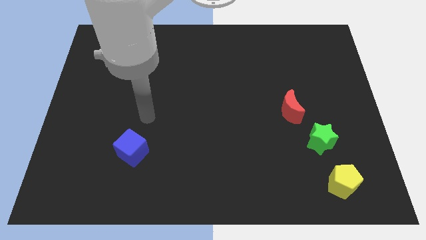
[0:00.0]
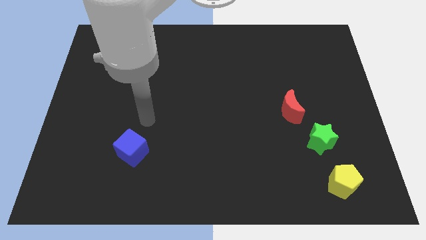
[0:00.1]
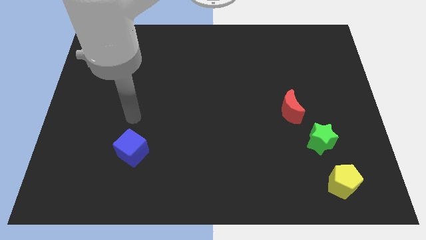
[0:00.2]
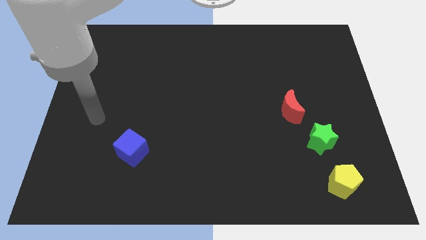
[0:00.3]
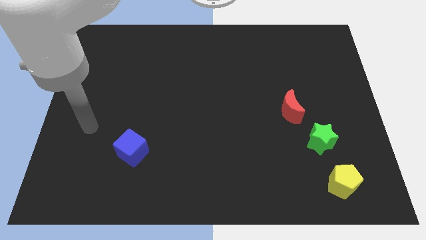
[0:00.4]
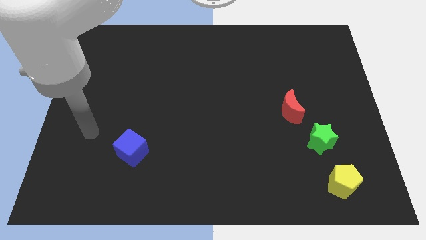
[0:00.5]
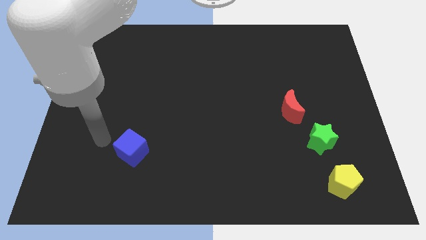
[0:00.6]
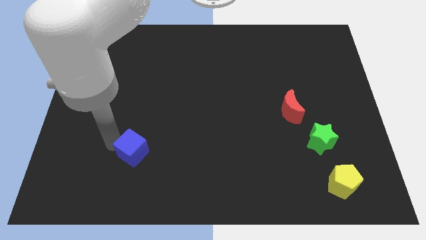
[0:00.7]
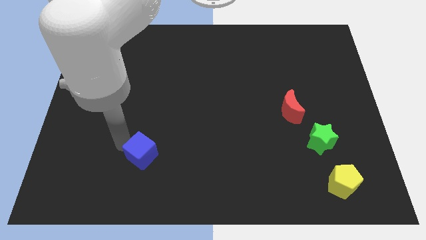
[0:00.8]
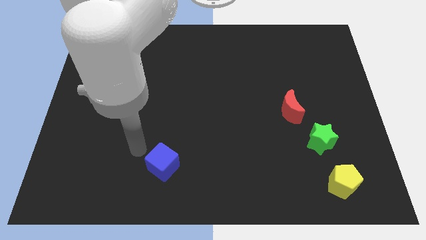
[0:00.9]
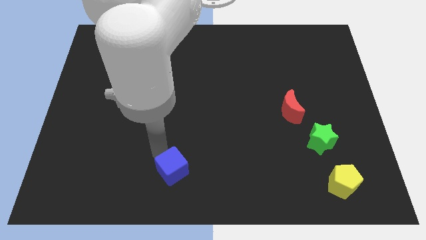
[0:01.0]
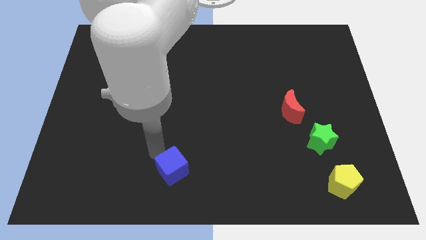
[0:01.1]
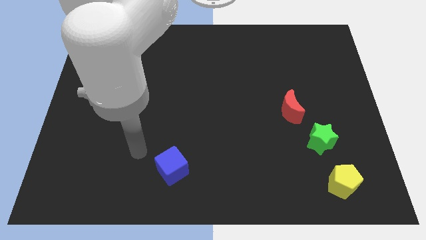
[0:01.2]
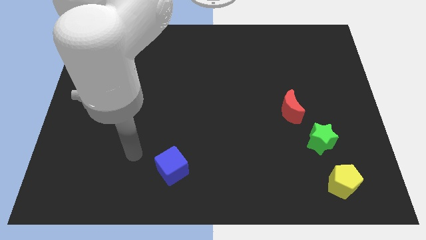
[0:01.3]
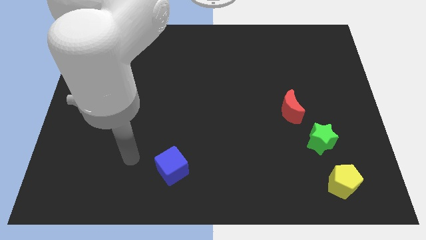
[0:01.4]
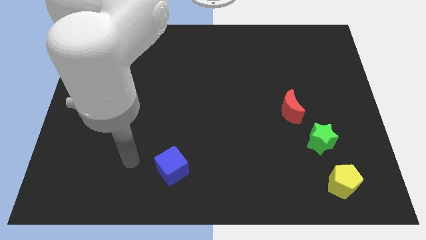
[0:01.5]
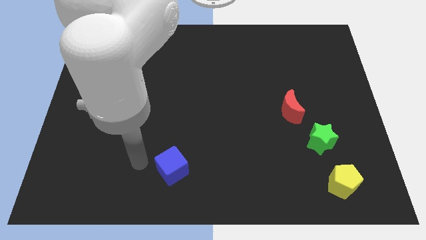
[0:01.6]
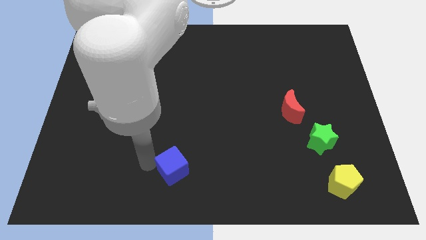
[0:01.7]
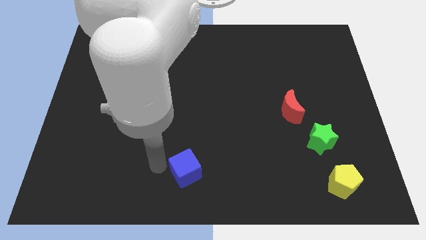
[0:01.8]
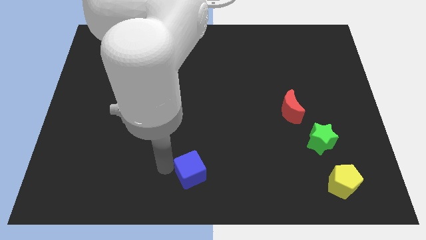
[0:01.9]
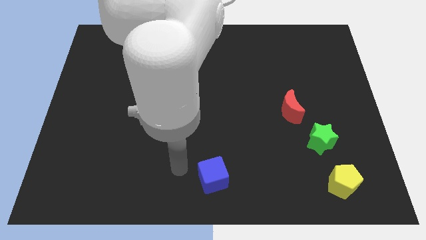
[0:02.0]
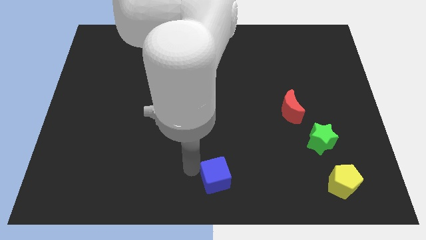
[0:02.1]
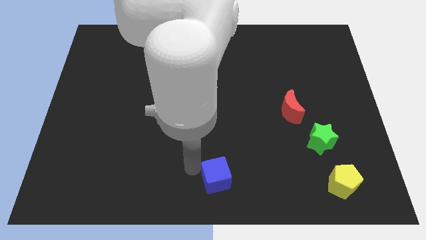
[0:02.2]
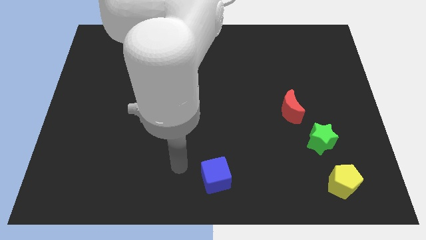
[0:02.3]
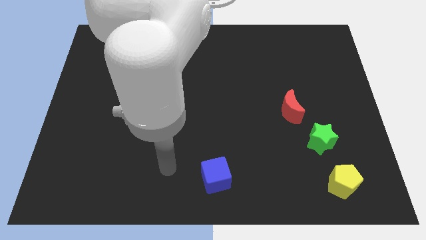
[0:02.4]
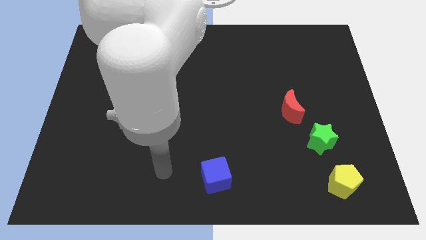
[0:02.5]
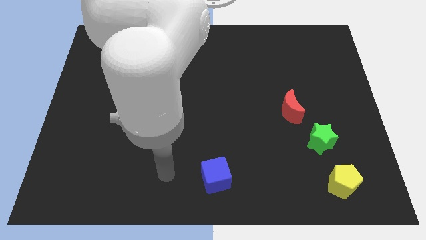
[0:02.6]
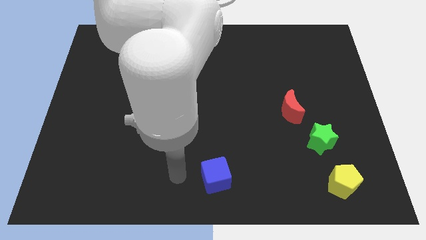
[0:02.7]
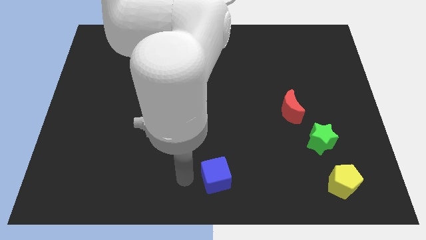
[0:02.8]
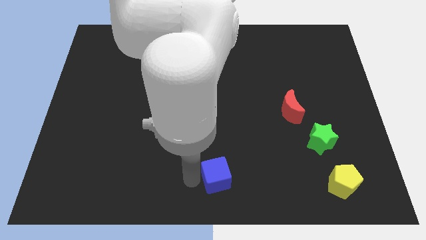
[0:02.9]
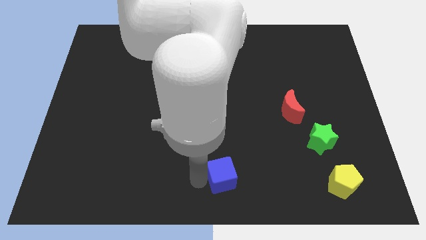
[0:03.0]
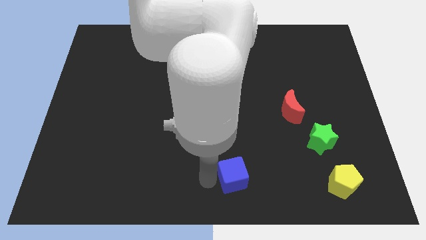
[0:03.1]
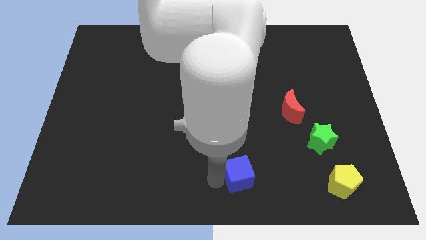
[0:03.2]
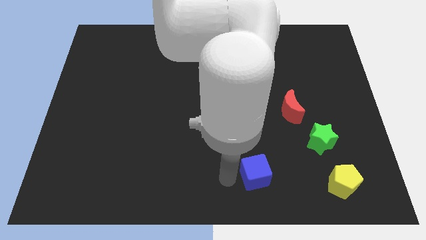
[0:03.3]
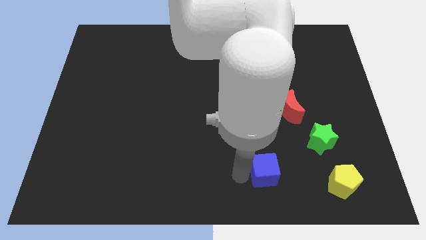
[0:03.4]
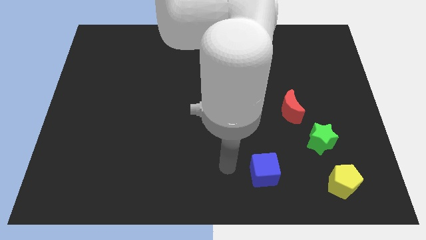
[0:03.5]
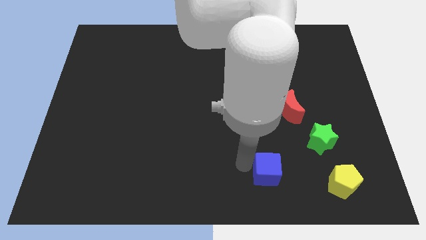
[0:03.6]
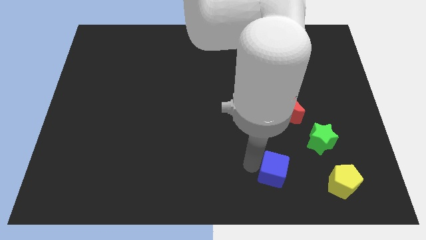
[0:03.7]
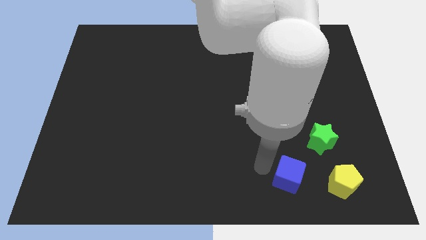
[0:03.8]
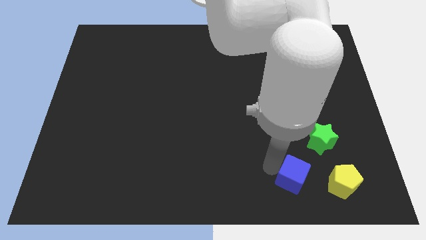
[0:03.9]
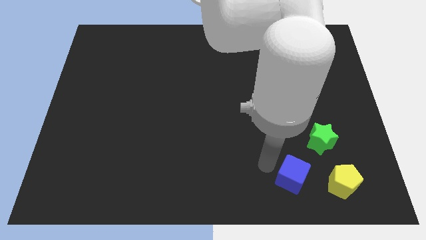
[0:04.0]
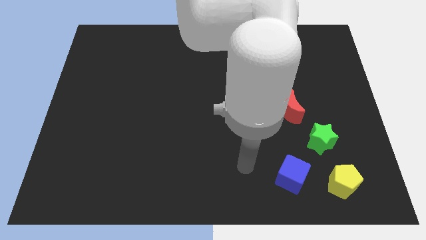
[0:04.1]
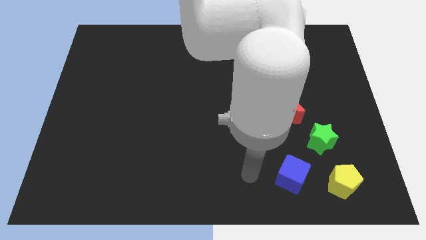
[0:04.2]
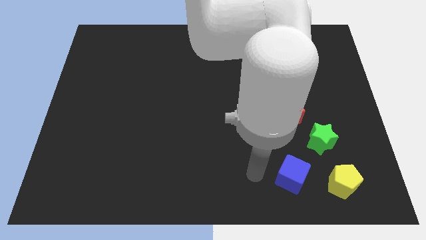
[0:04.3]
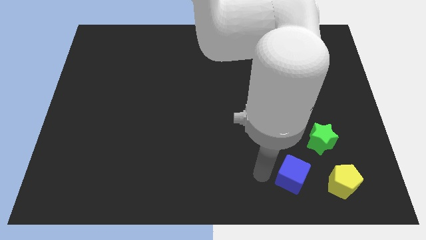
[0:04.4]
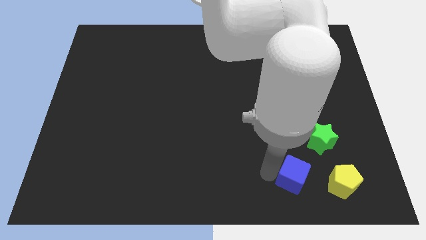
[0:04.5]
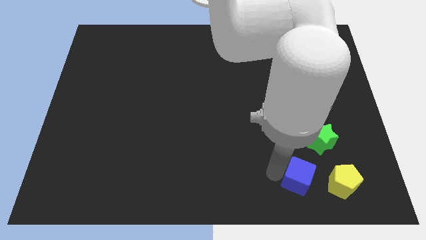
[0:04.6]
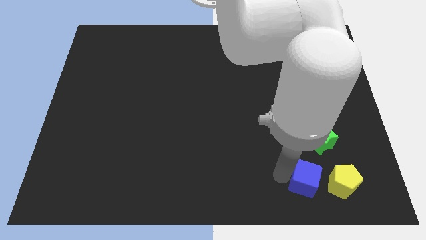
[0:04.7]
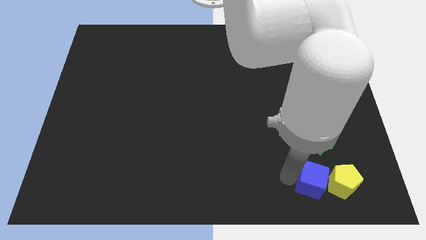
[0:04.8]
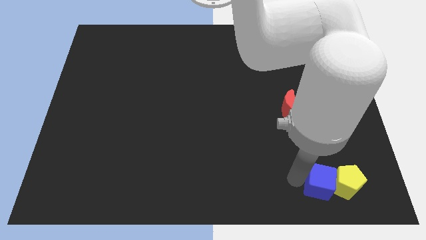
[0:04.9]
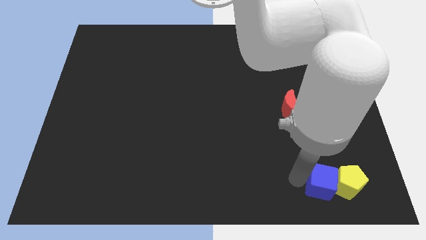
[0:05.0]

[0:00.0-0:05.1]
move the blue block towards the yellow block

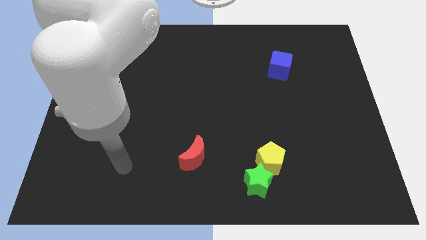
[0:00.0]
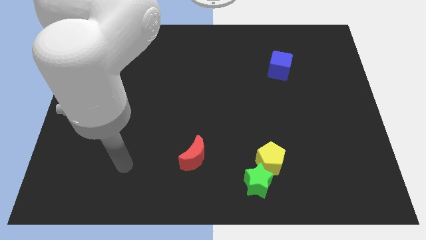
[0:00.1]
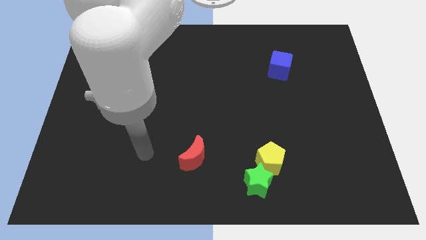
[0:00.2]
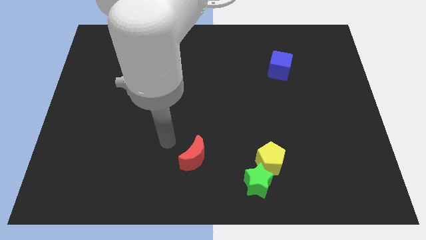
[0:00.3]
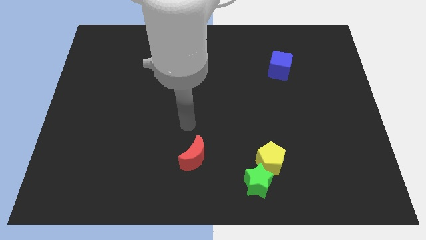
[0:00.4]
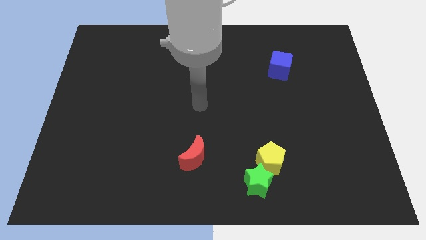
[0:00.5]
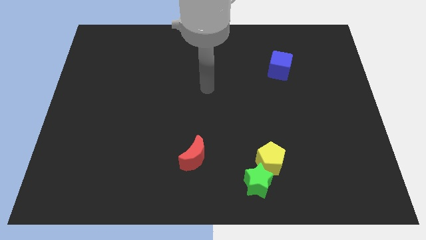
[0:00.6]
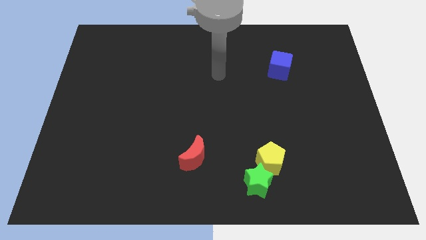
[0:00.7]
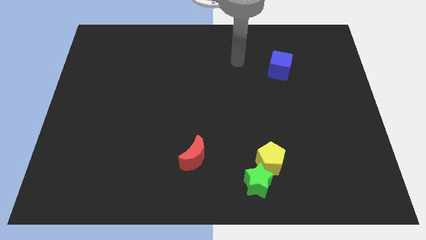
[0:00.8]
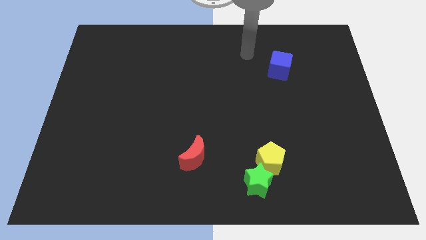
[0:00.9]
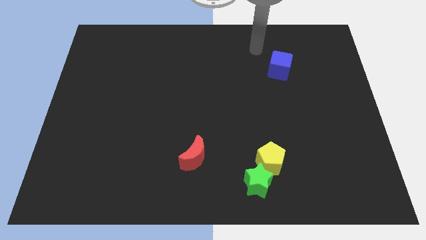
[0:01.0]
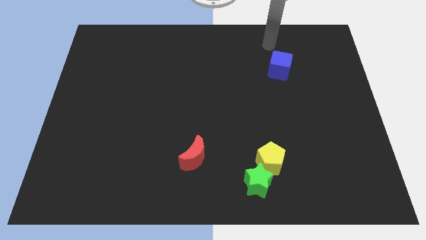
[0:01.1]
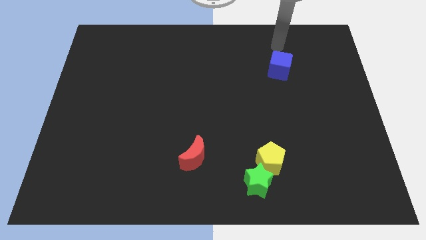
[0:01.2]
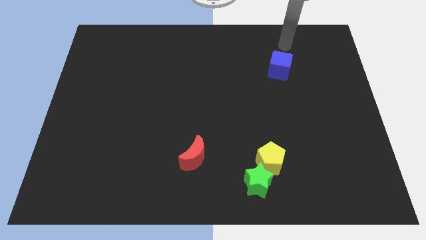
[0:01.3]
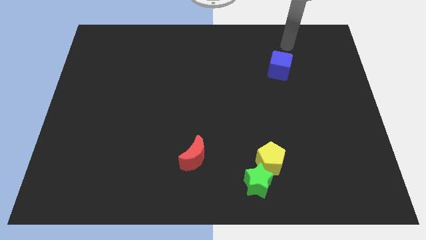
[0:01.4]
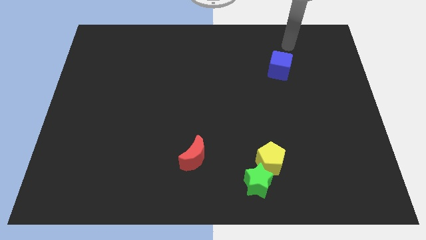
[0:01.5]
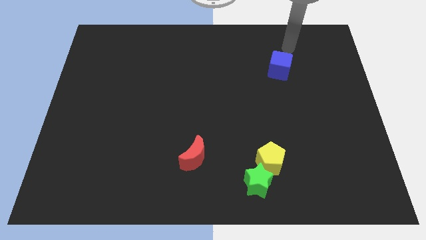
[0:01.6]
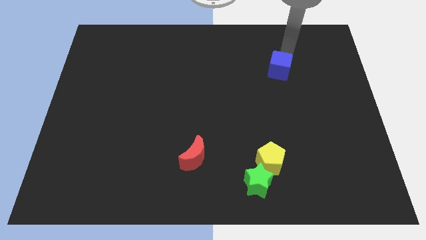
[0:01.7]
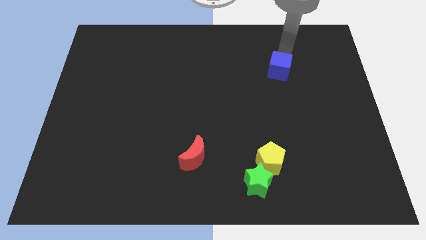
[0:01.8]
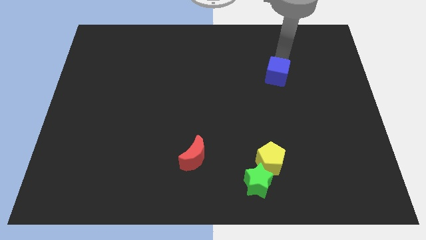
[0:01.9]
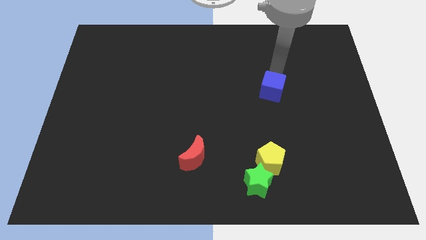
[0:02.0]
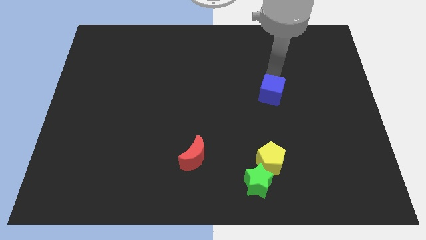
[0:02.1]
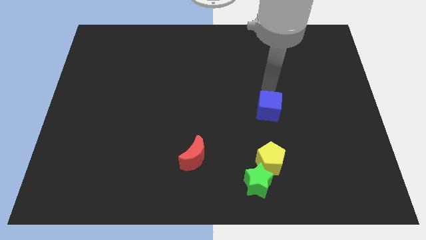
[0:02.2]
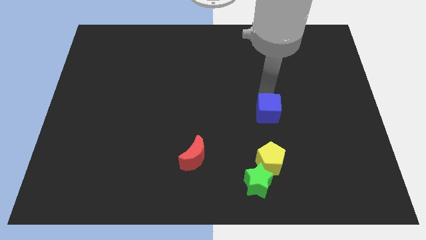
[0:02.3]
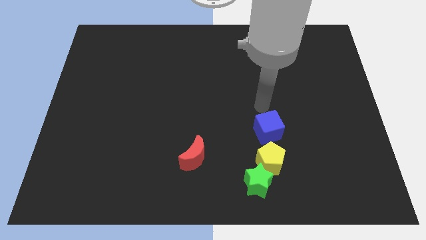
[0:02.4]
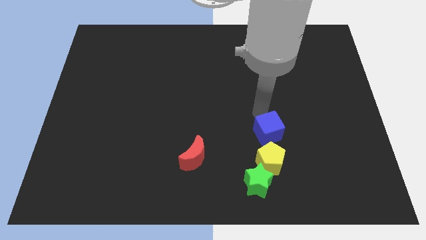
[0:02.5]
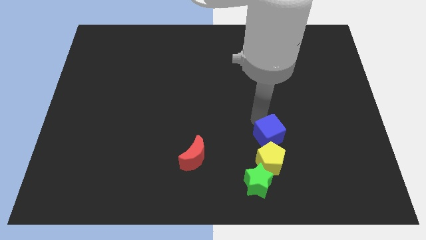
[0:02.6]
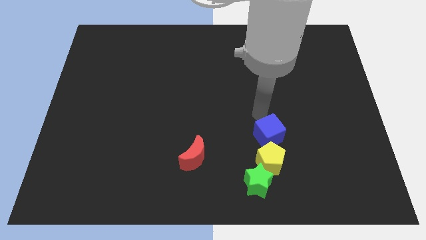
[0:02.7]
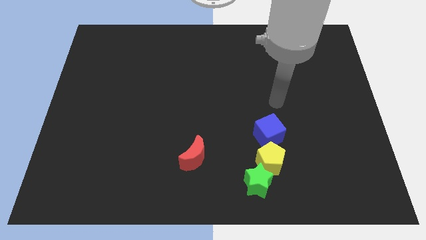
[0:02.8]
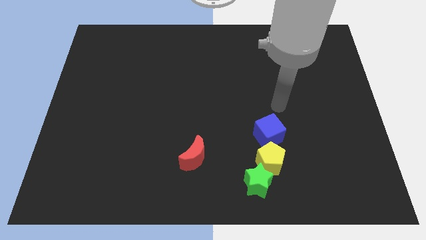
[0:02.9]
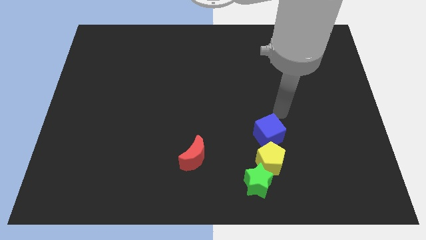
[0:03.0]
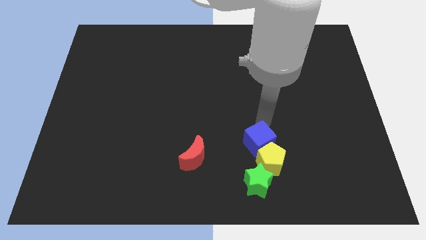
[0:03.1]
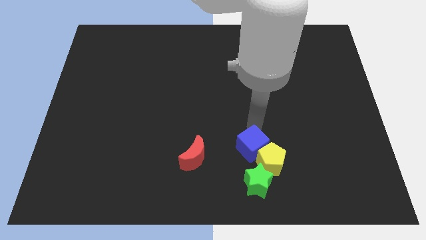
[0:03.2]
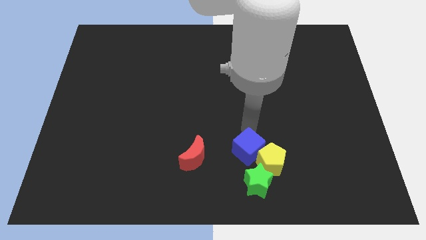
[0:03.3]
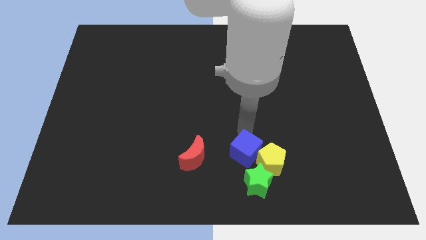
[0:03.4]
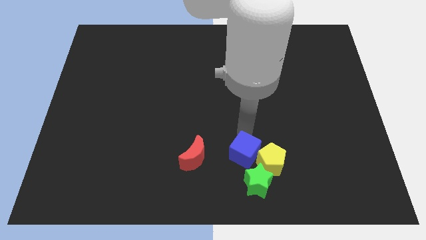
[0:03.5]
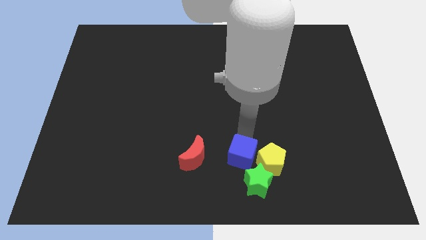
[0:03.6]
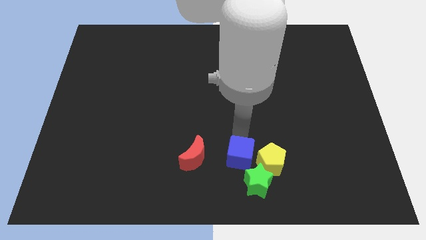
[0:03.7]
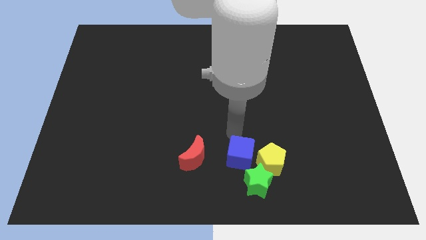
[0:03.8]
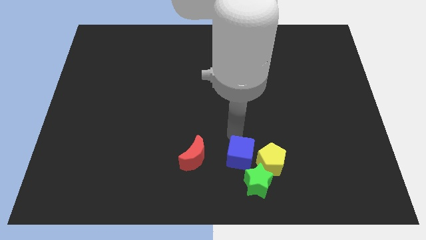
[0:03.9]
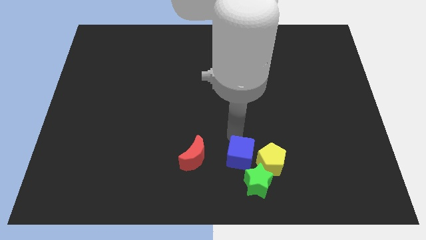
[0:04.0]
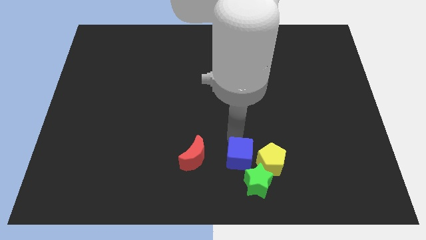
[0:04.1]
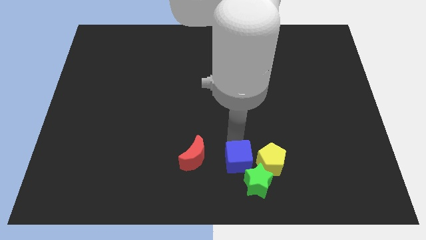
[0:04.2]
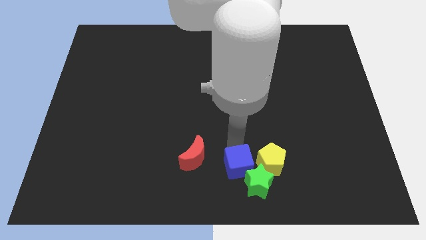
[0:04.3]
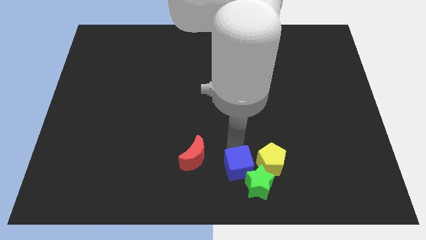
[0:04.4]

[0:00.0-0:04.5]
put the cube to the green block
